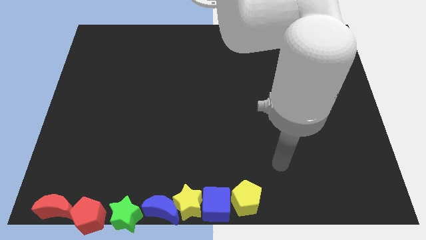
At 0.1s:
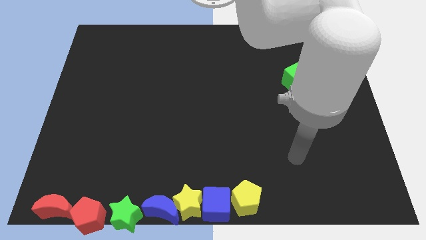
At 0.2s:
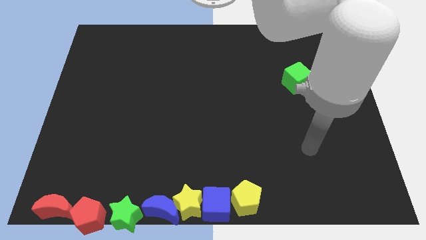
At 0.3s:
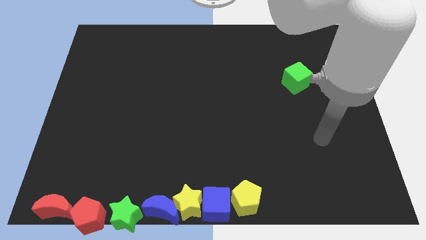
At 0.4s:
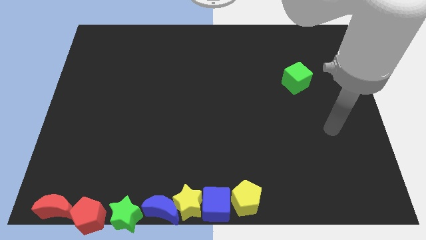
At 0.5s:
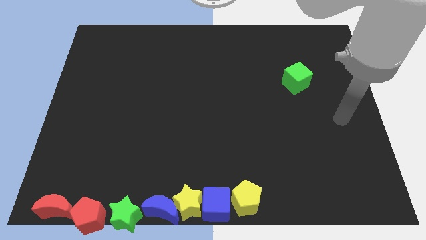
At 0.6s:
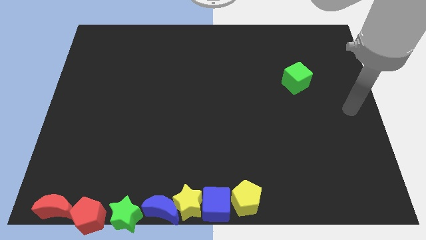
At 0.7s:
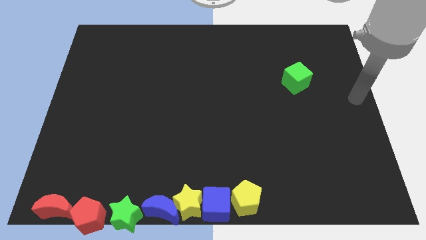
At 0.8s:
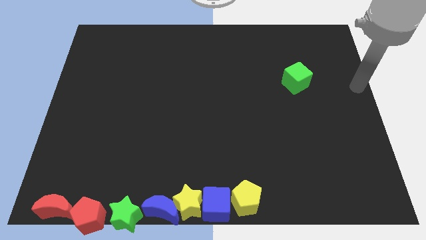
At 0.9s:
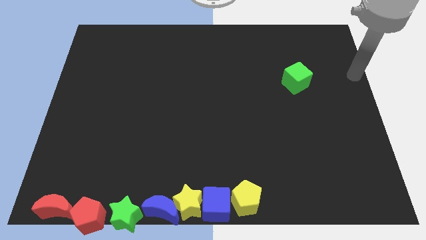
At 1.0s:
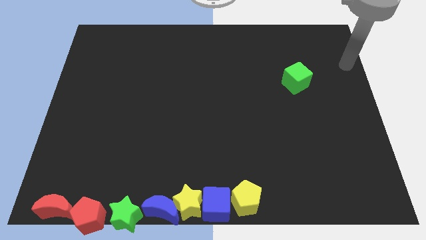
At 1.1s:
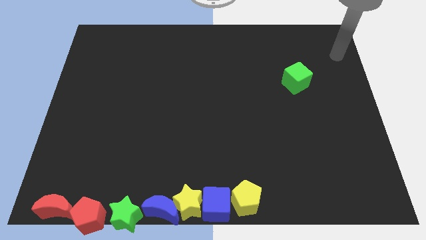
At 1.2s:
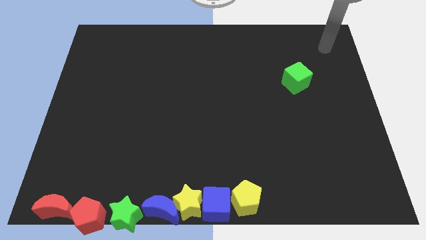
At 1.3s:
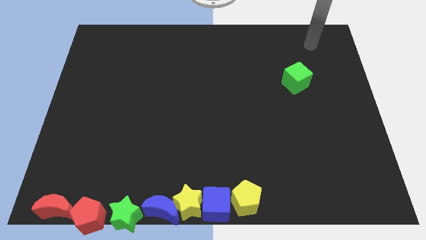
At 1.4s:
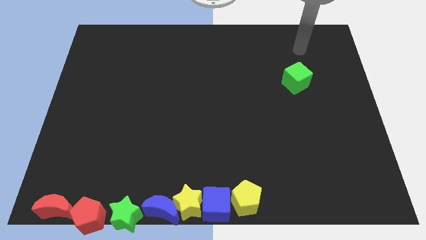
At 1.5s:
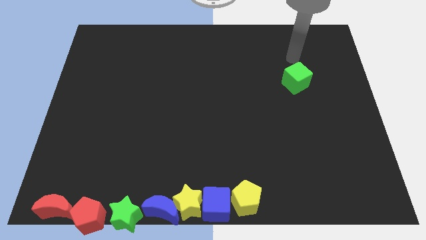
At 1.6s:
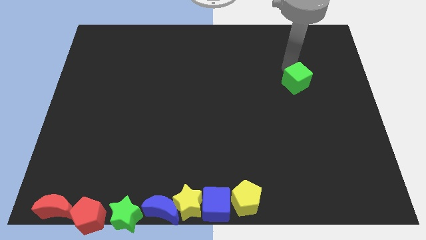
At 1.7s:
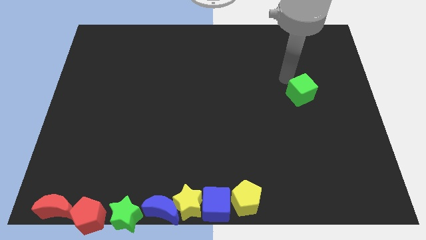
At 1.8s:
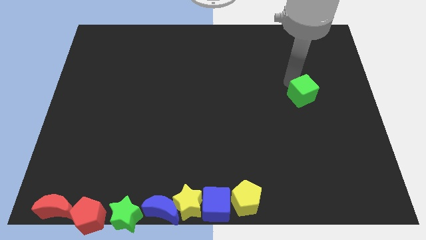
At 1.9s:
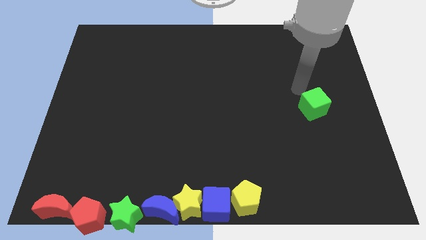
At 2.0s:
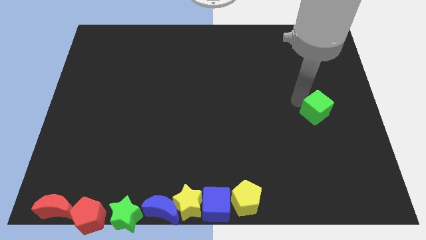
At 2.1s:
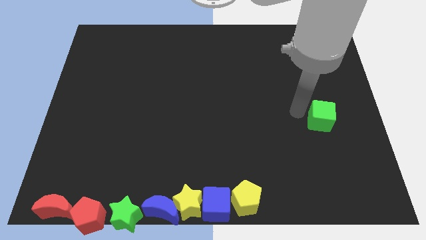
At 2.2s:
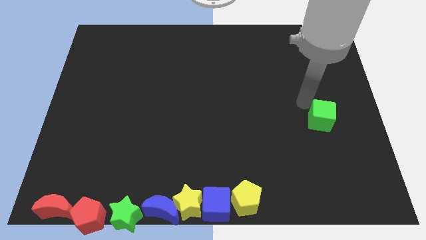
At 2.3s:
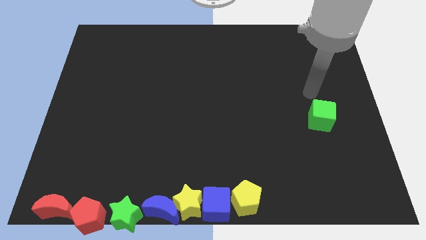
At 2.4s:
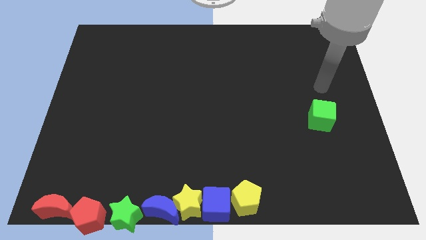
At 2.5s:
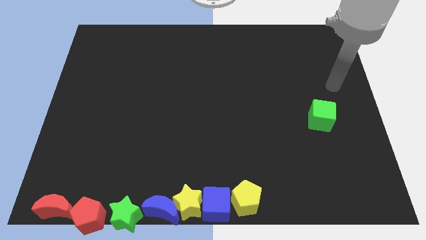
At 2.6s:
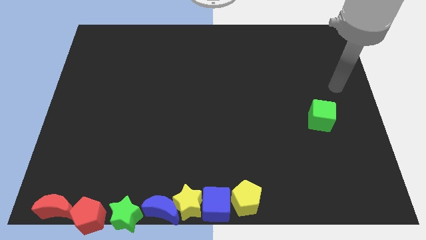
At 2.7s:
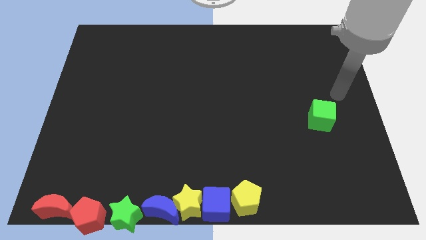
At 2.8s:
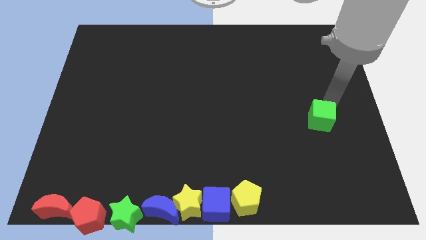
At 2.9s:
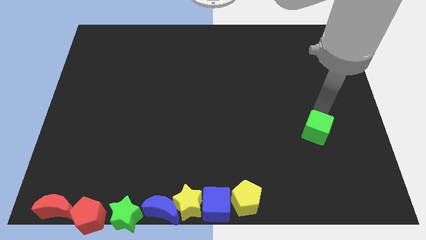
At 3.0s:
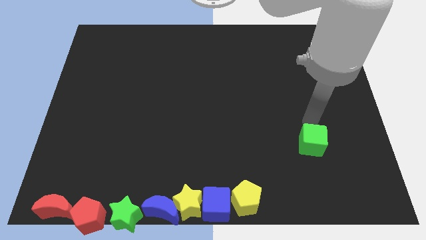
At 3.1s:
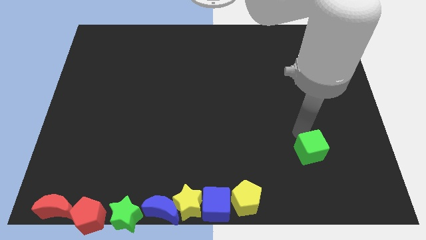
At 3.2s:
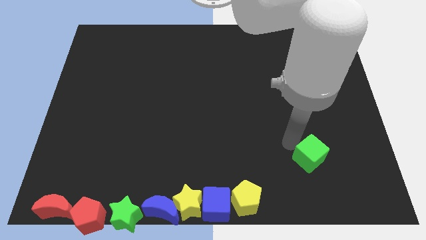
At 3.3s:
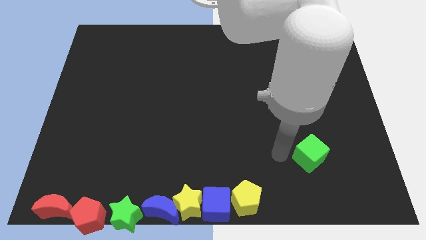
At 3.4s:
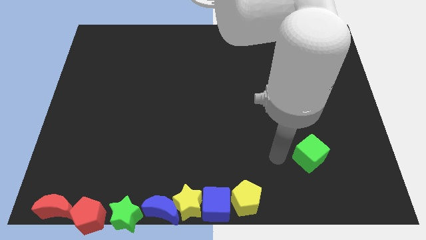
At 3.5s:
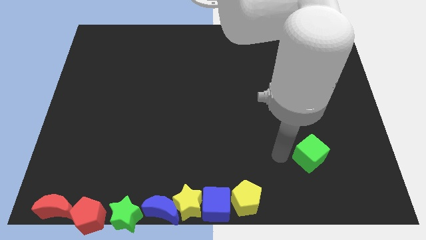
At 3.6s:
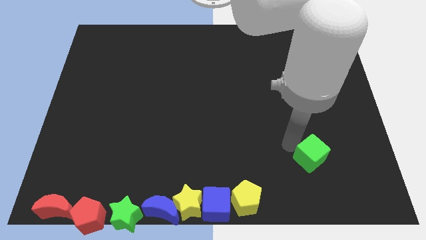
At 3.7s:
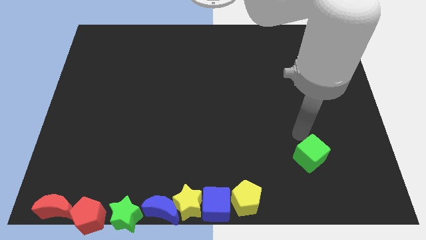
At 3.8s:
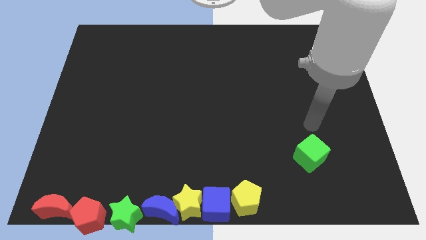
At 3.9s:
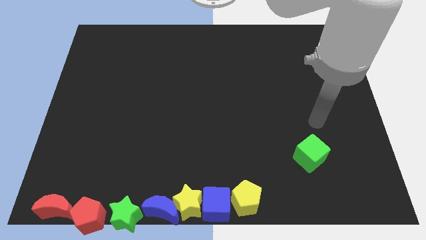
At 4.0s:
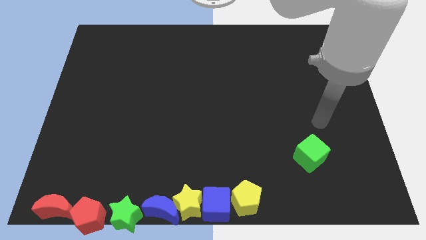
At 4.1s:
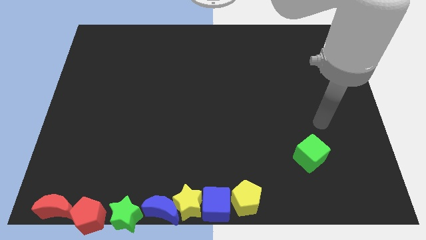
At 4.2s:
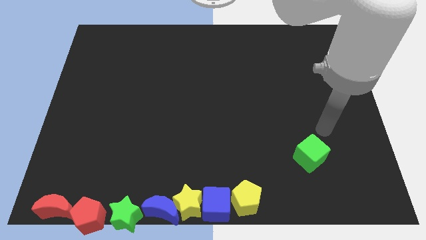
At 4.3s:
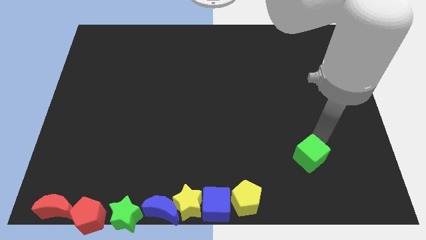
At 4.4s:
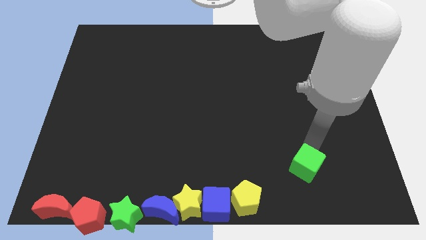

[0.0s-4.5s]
push the green cube to the bottom side

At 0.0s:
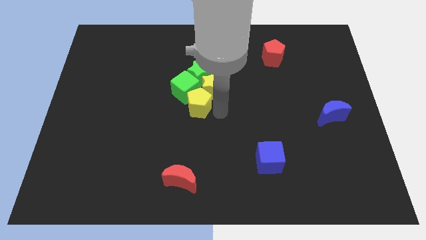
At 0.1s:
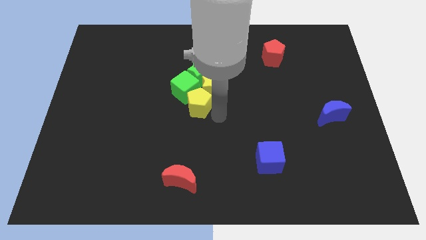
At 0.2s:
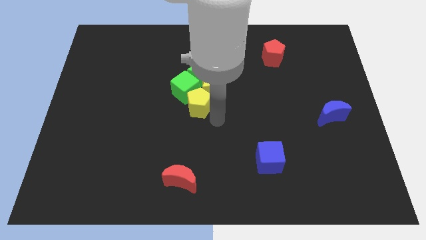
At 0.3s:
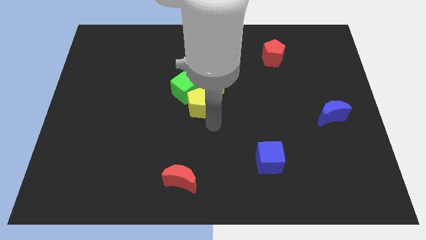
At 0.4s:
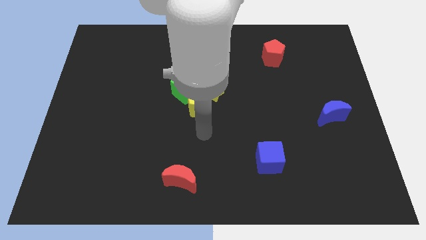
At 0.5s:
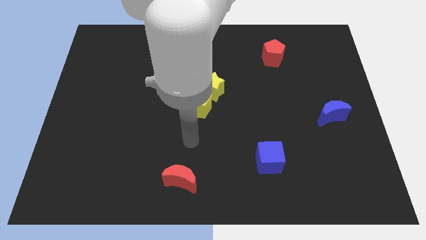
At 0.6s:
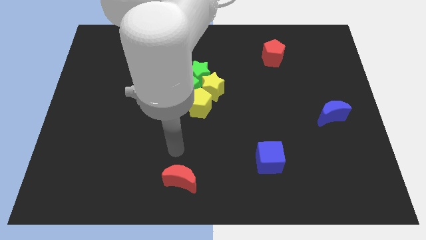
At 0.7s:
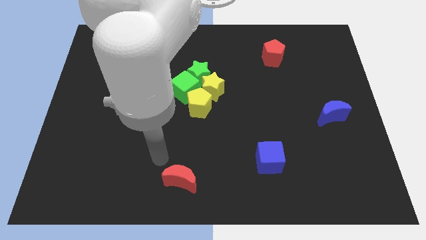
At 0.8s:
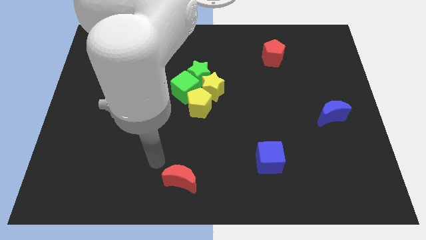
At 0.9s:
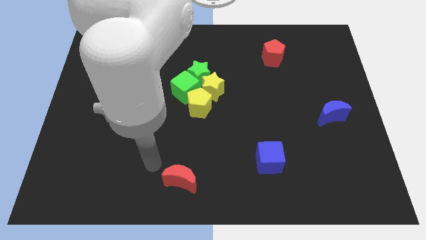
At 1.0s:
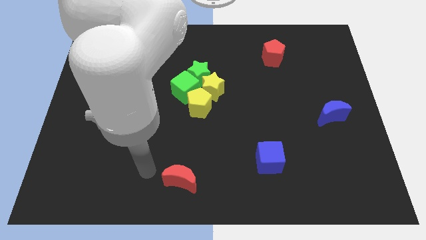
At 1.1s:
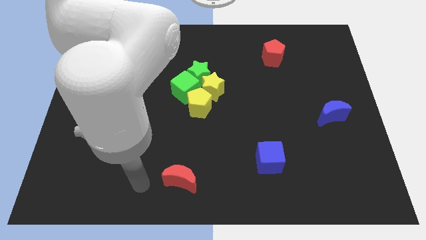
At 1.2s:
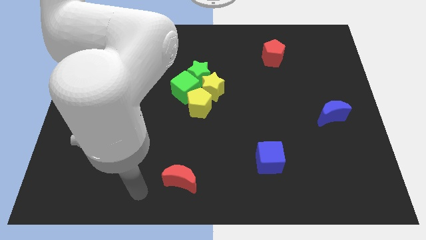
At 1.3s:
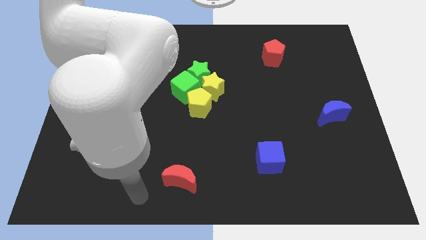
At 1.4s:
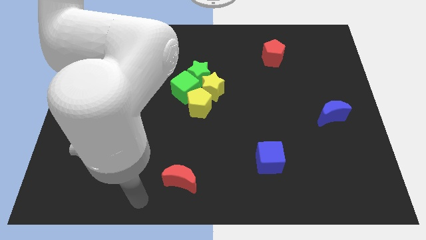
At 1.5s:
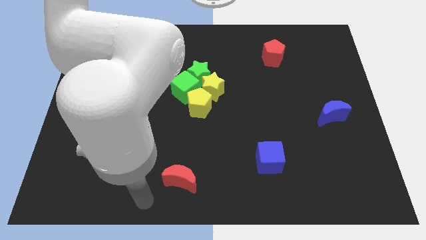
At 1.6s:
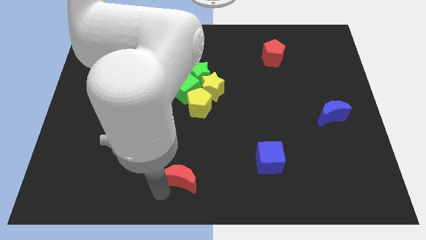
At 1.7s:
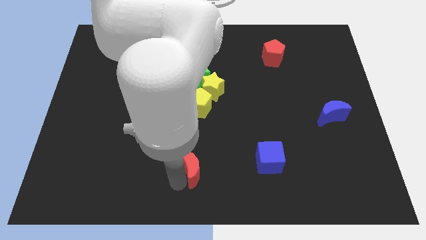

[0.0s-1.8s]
point your hand at the bottom left side of the crescent

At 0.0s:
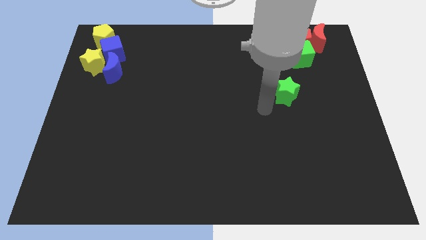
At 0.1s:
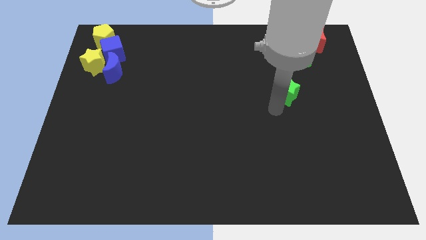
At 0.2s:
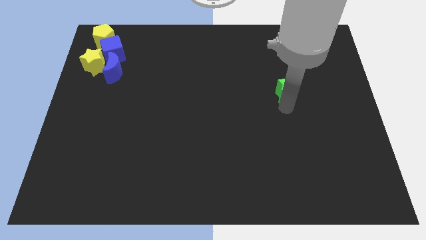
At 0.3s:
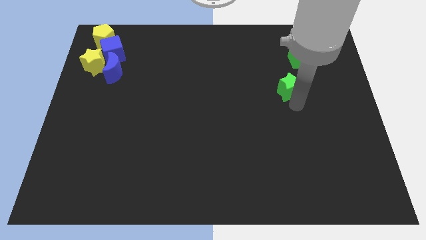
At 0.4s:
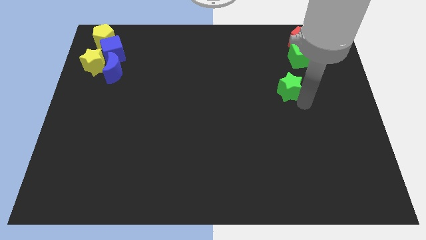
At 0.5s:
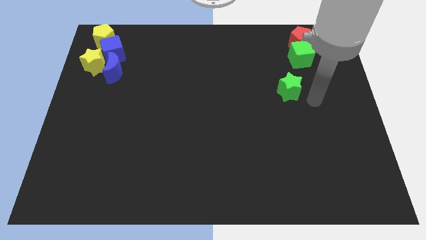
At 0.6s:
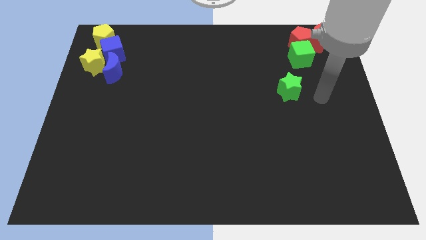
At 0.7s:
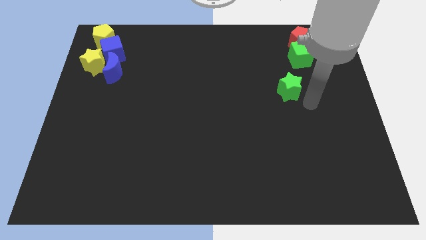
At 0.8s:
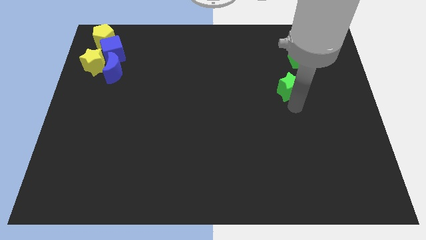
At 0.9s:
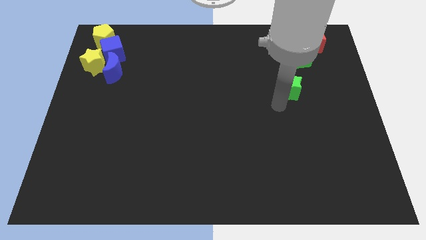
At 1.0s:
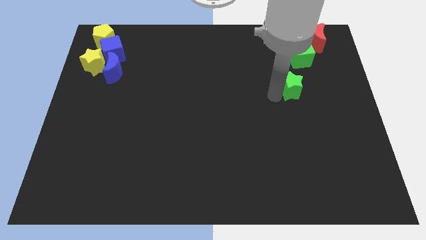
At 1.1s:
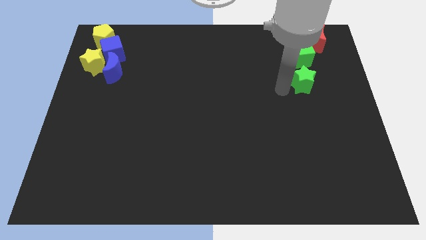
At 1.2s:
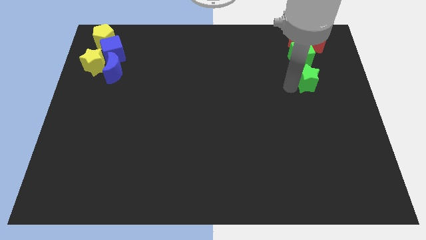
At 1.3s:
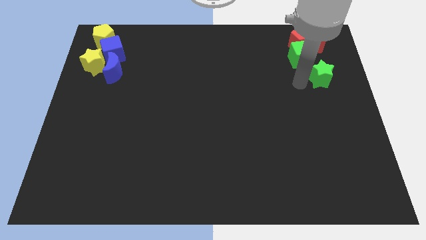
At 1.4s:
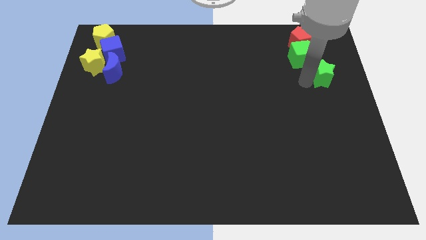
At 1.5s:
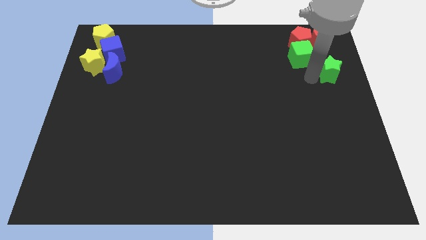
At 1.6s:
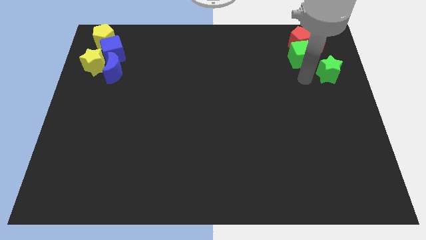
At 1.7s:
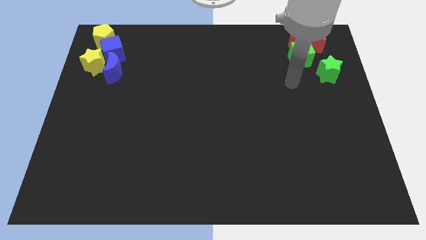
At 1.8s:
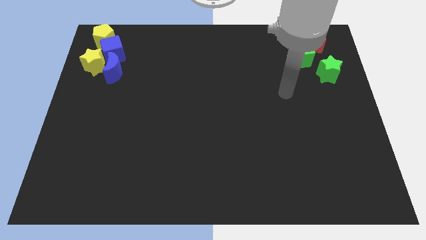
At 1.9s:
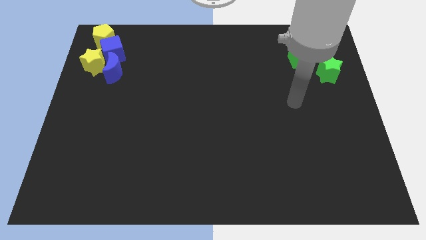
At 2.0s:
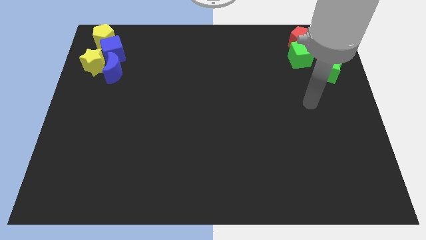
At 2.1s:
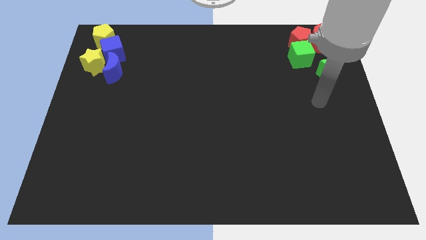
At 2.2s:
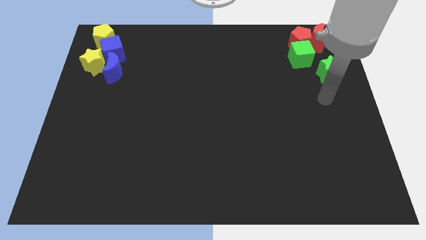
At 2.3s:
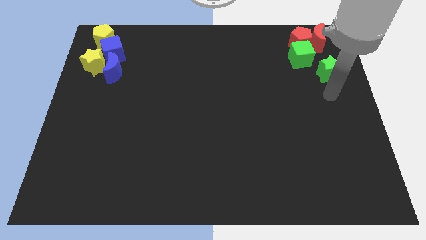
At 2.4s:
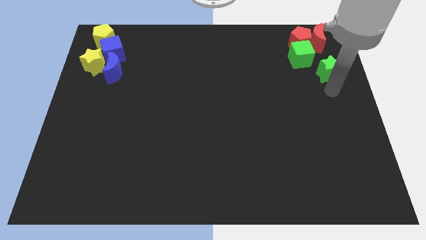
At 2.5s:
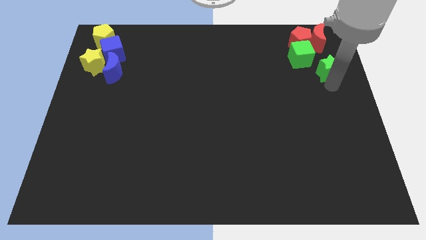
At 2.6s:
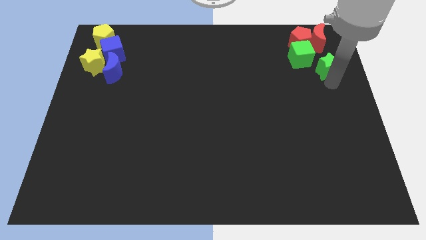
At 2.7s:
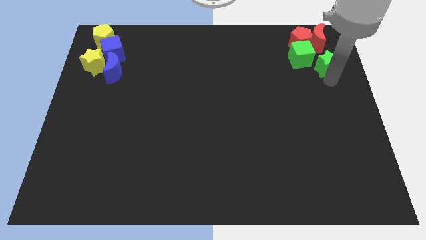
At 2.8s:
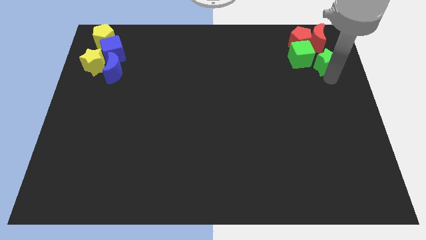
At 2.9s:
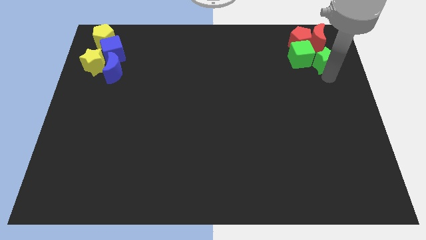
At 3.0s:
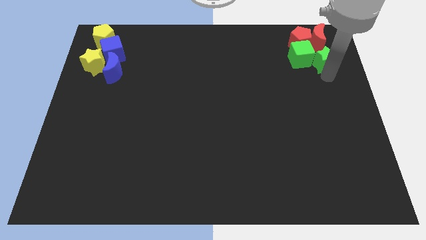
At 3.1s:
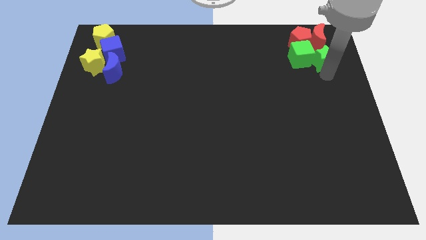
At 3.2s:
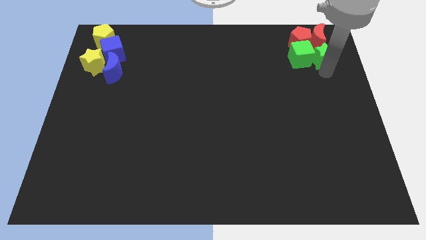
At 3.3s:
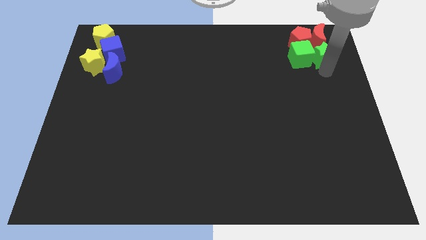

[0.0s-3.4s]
place the green star right to the green cube
